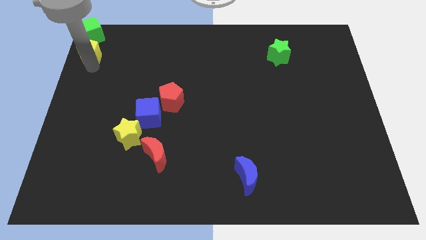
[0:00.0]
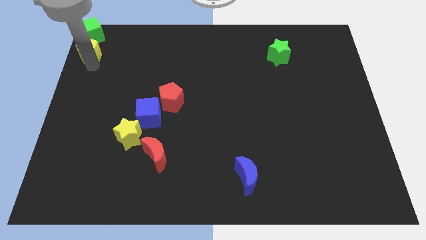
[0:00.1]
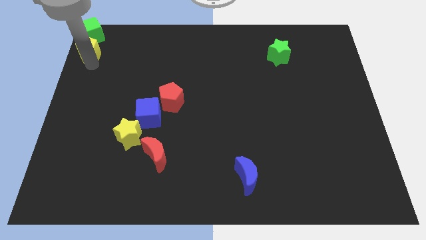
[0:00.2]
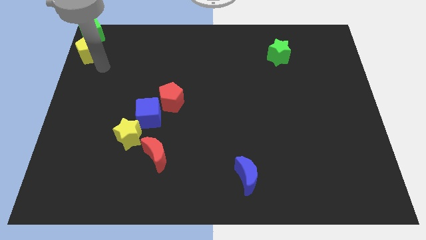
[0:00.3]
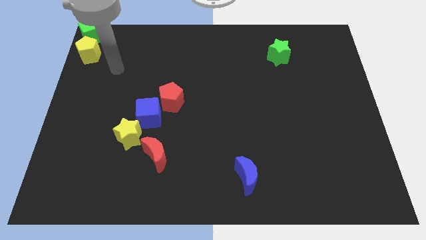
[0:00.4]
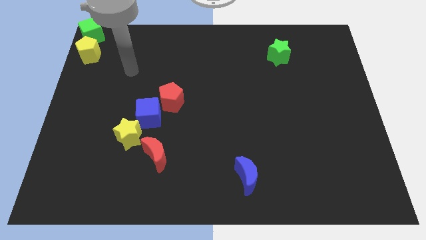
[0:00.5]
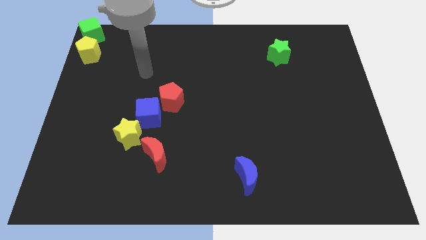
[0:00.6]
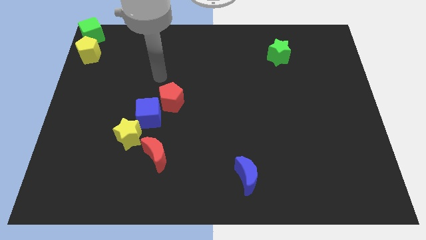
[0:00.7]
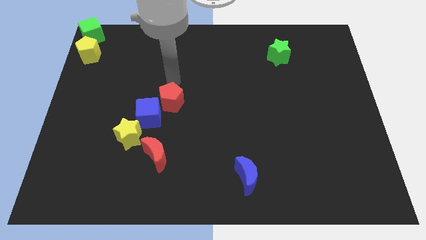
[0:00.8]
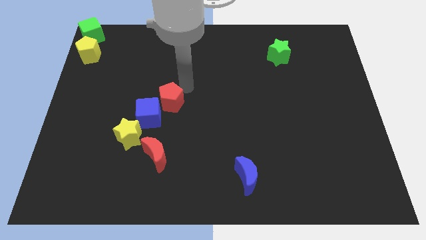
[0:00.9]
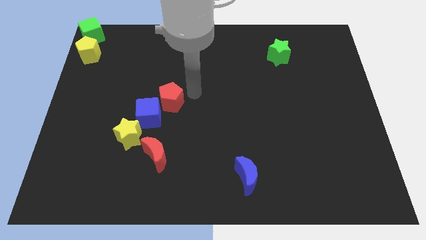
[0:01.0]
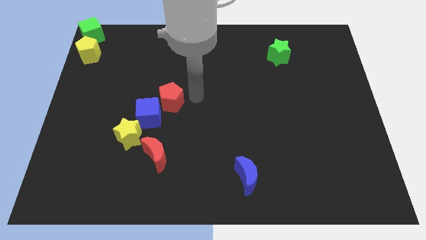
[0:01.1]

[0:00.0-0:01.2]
place your arm to the right of the red pentagon

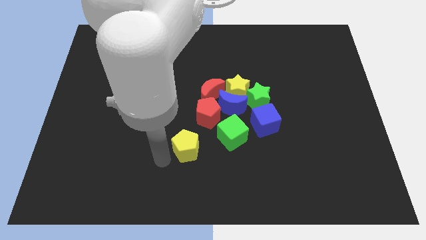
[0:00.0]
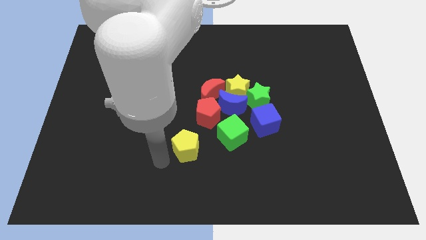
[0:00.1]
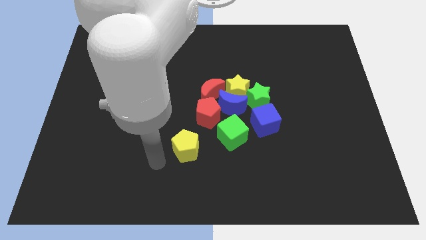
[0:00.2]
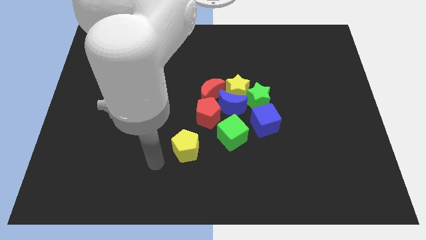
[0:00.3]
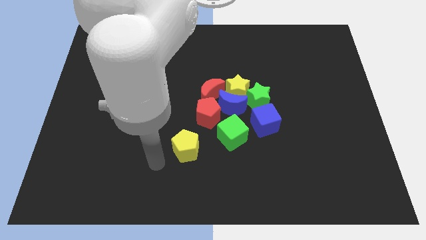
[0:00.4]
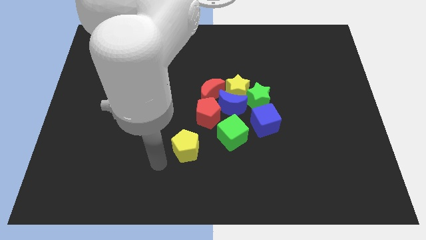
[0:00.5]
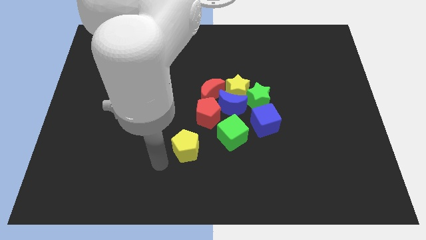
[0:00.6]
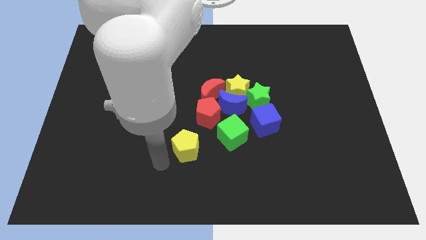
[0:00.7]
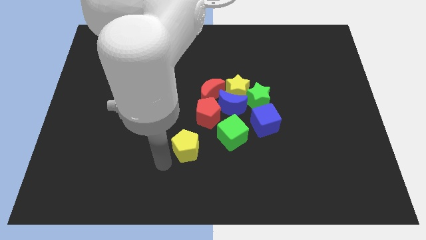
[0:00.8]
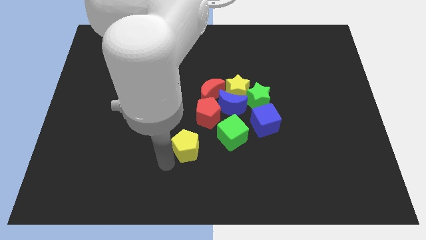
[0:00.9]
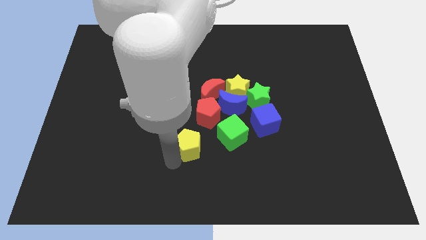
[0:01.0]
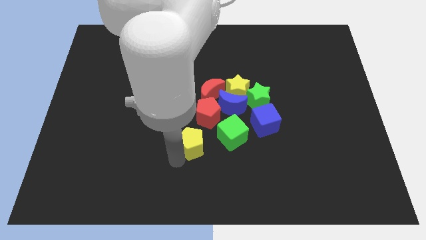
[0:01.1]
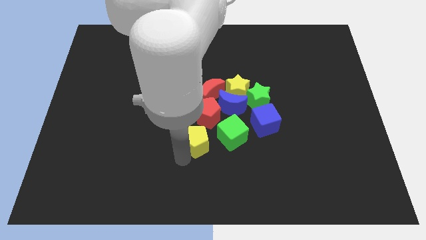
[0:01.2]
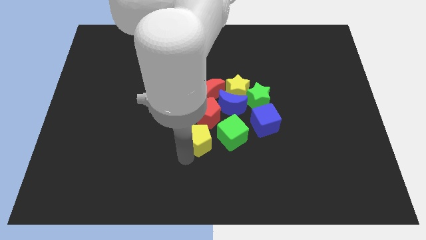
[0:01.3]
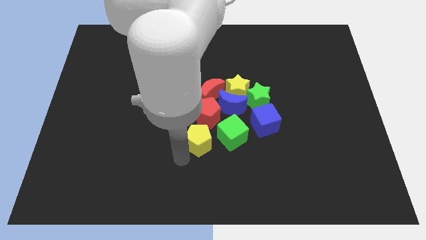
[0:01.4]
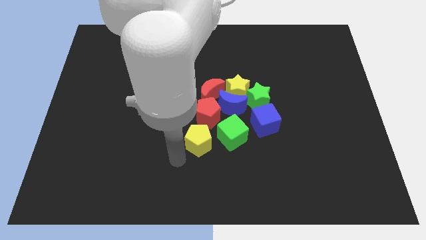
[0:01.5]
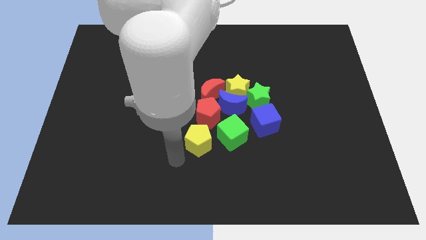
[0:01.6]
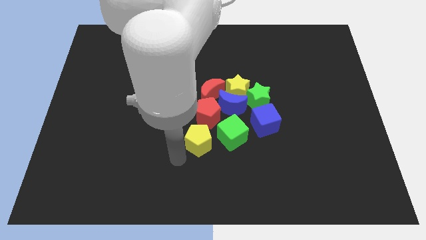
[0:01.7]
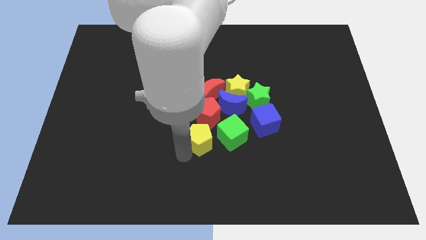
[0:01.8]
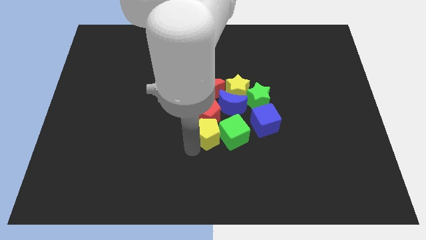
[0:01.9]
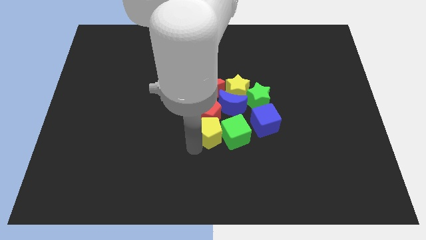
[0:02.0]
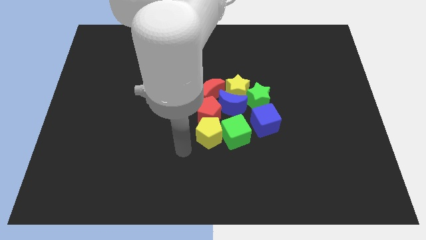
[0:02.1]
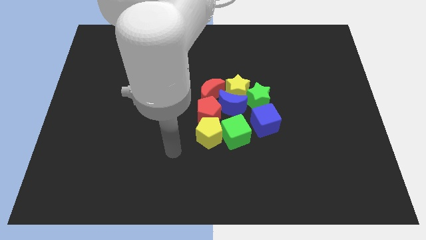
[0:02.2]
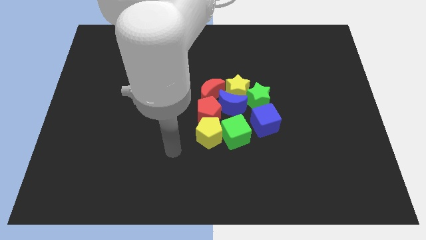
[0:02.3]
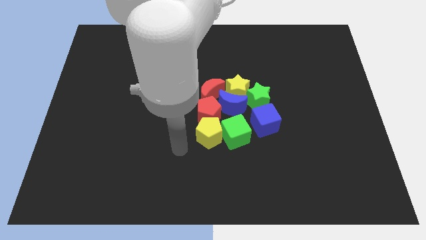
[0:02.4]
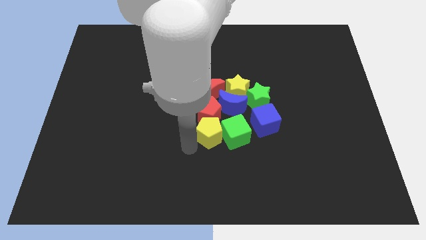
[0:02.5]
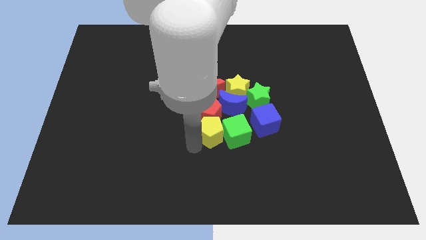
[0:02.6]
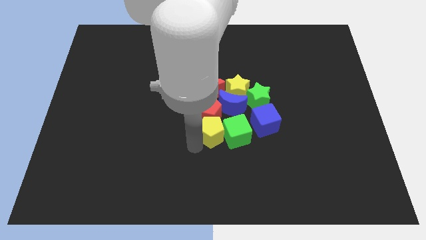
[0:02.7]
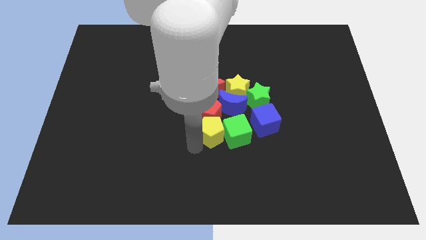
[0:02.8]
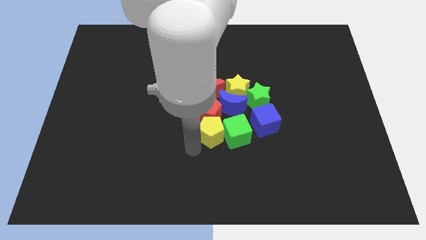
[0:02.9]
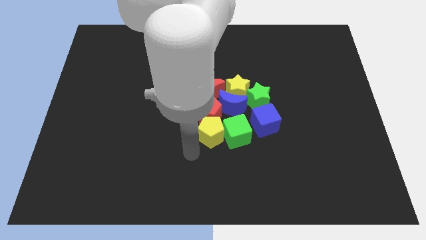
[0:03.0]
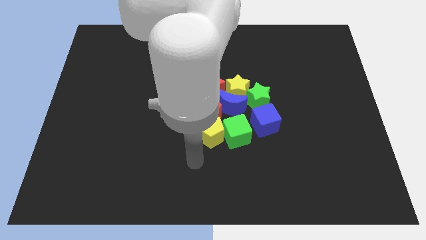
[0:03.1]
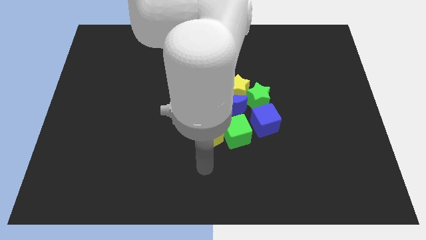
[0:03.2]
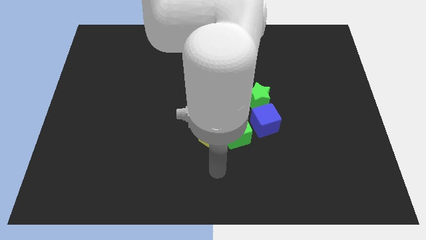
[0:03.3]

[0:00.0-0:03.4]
move yellow pentagon towards the green cube

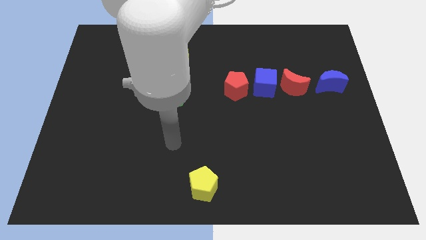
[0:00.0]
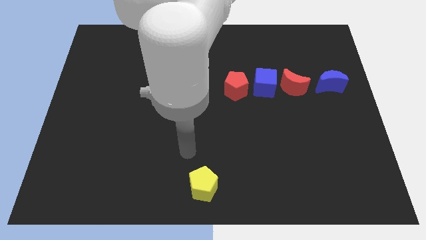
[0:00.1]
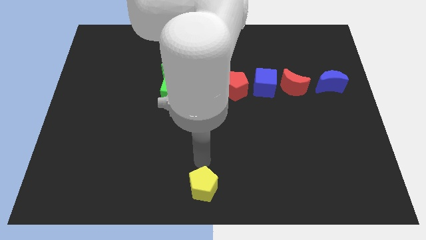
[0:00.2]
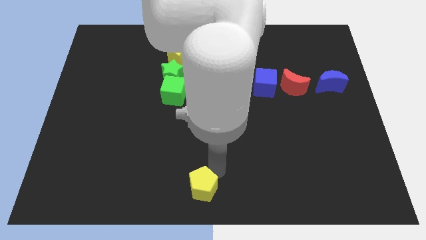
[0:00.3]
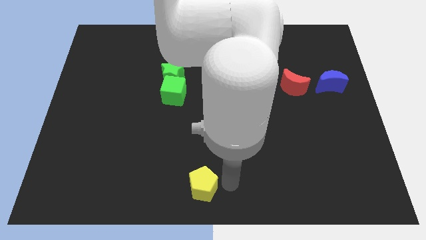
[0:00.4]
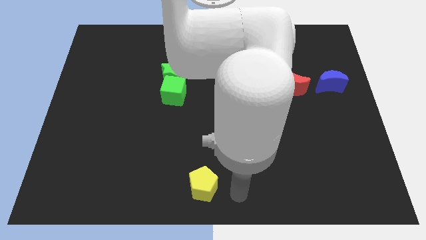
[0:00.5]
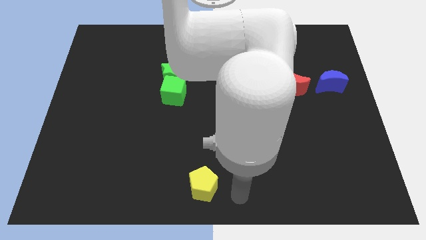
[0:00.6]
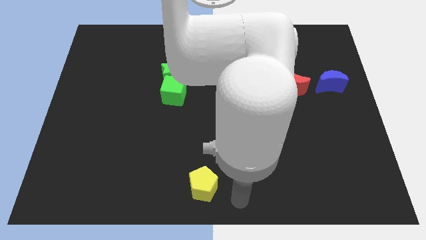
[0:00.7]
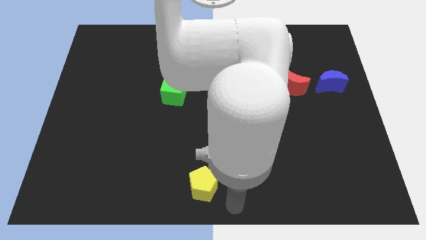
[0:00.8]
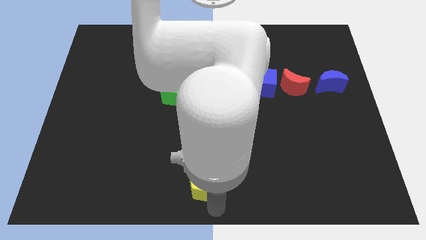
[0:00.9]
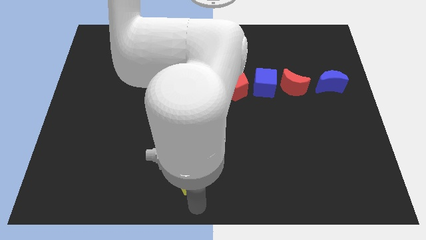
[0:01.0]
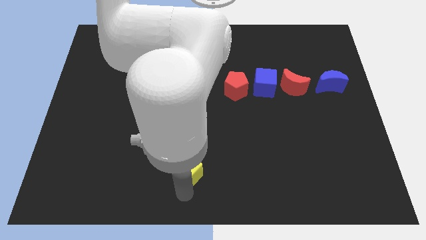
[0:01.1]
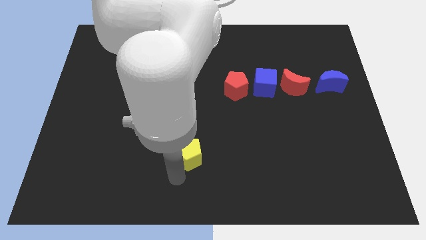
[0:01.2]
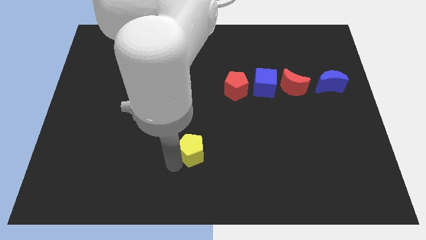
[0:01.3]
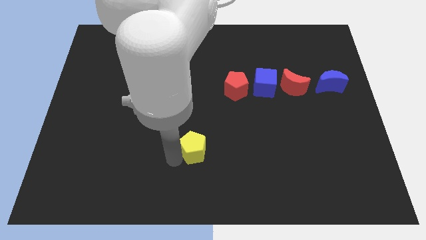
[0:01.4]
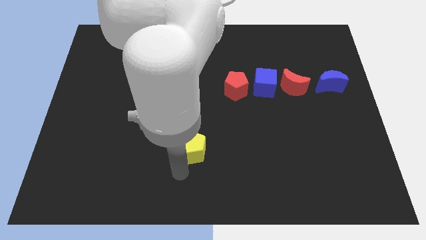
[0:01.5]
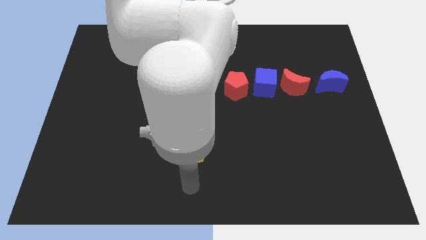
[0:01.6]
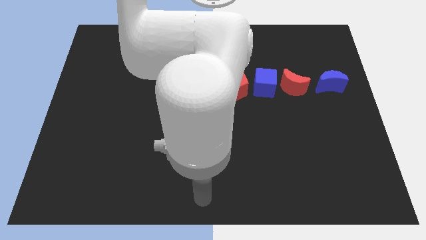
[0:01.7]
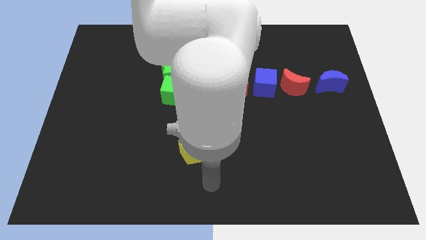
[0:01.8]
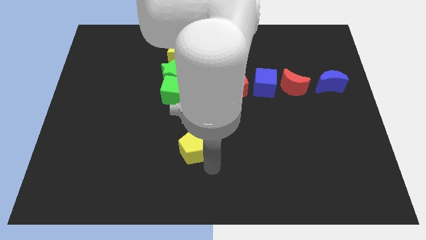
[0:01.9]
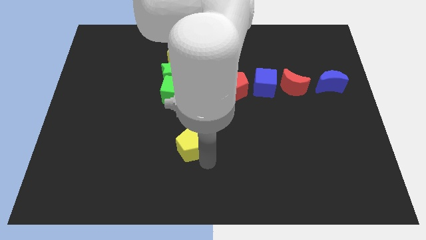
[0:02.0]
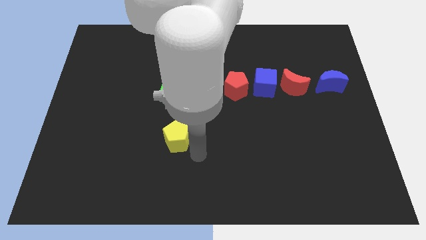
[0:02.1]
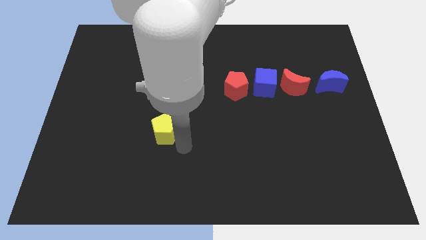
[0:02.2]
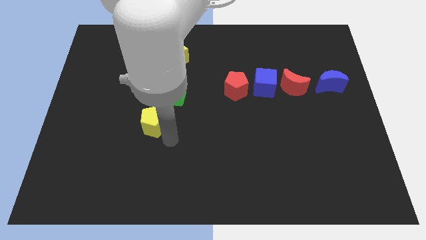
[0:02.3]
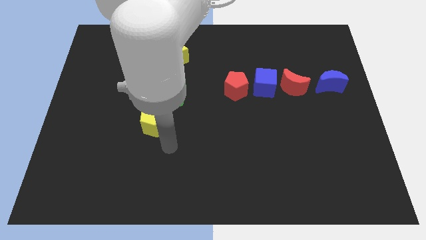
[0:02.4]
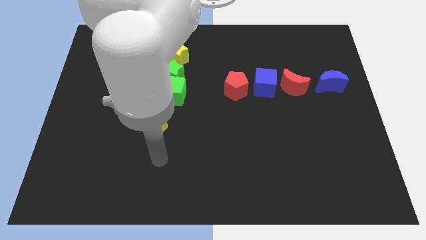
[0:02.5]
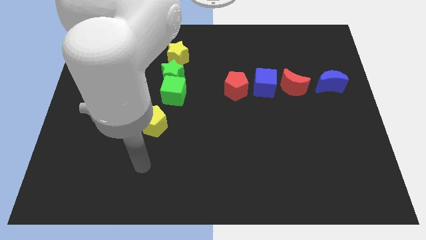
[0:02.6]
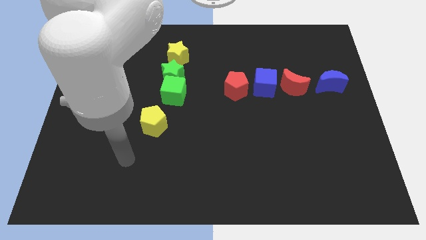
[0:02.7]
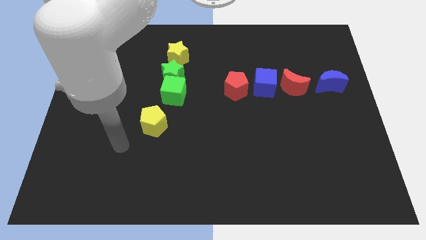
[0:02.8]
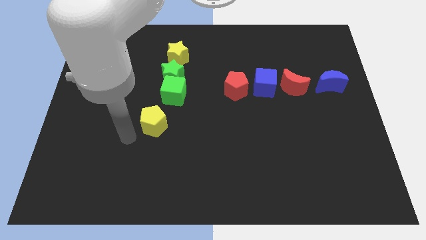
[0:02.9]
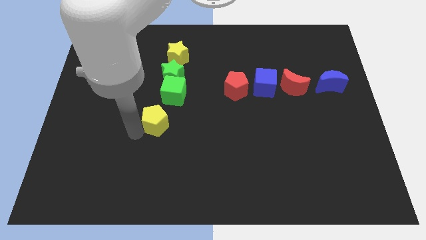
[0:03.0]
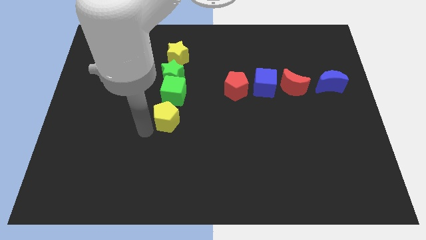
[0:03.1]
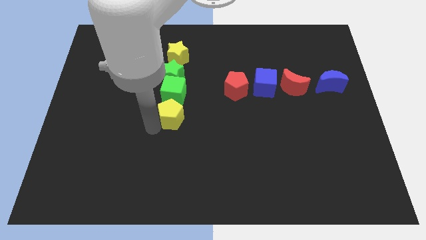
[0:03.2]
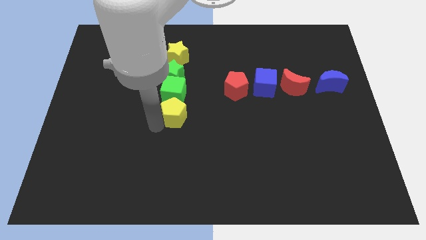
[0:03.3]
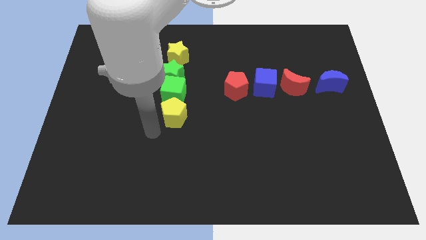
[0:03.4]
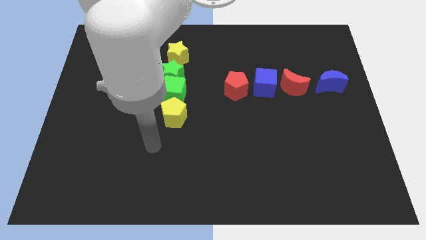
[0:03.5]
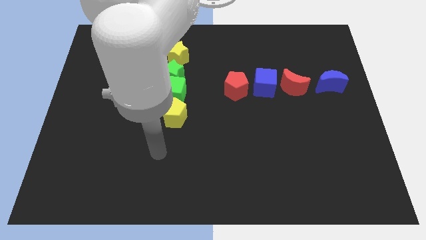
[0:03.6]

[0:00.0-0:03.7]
place the yellow pentagon below the green cube

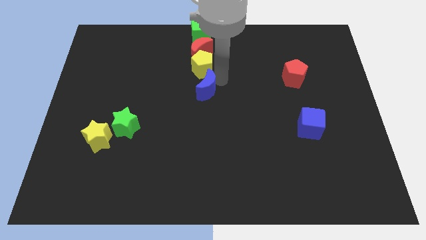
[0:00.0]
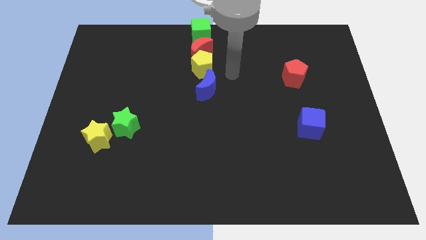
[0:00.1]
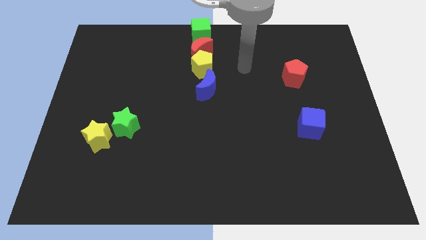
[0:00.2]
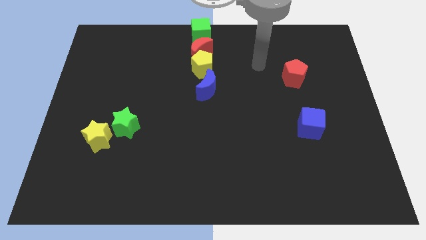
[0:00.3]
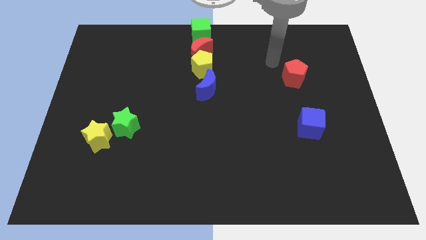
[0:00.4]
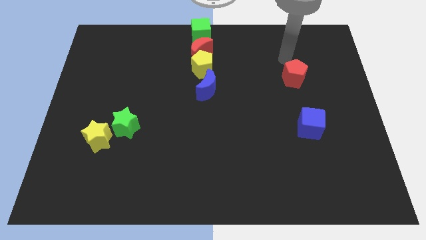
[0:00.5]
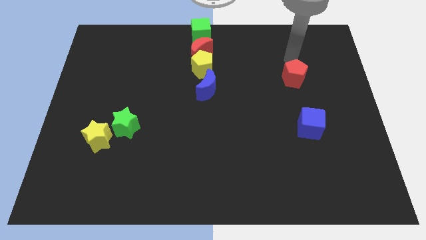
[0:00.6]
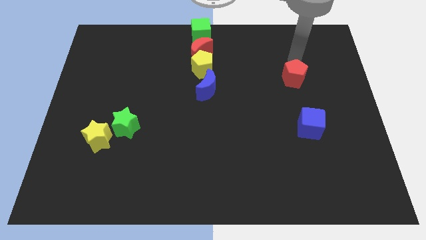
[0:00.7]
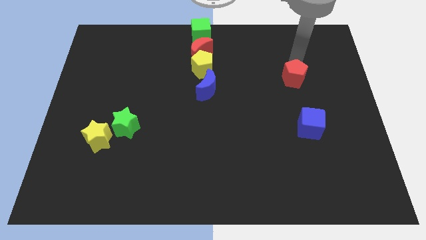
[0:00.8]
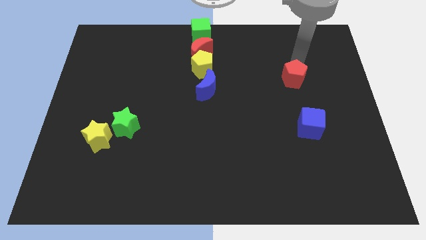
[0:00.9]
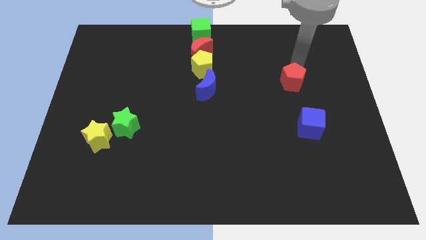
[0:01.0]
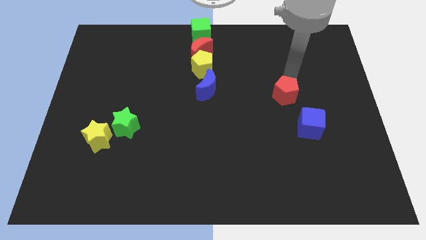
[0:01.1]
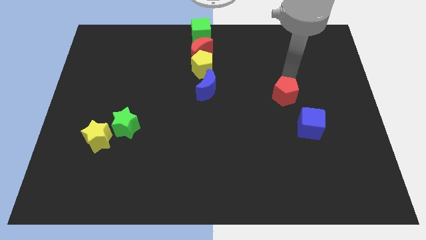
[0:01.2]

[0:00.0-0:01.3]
move the red pentagon slightly to the bottom
